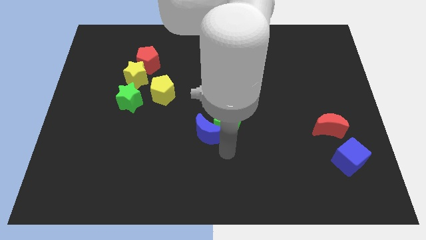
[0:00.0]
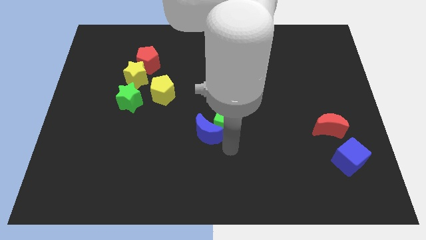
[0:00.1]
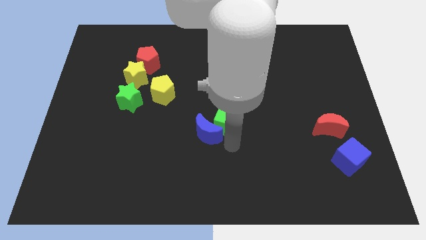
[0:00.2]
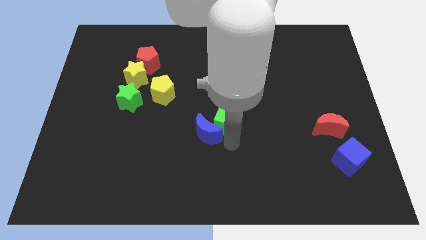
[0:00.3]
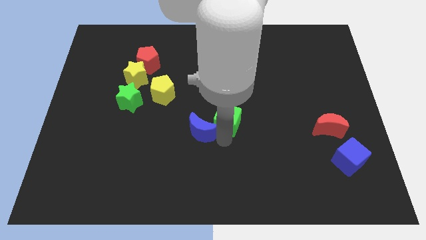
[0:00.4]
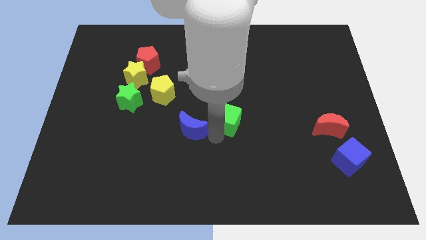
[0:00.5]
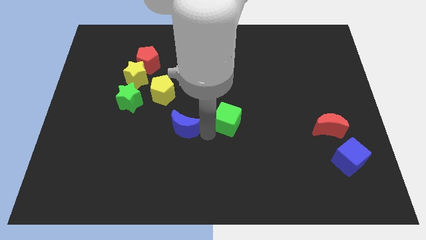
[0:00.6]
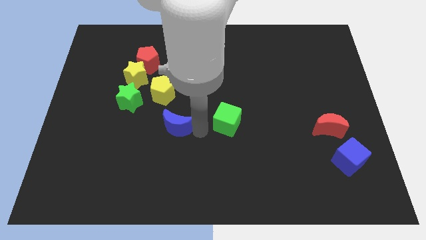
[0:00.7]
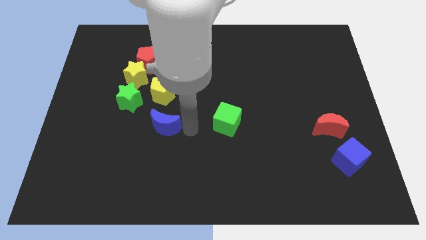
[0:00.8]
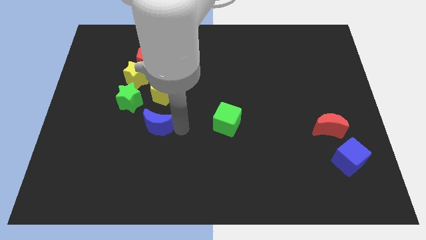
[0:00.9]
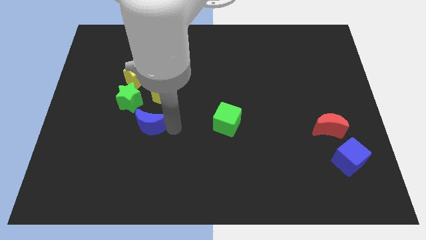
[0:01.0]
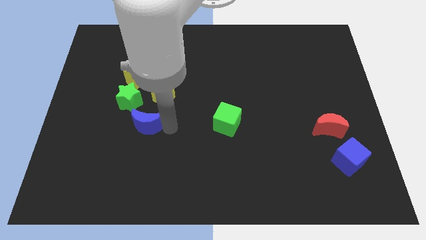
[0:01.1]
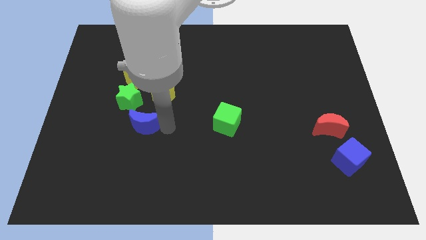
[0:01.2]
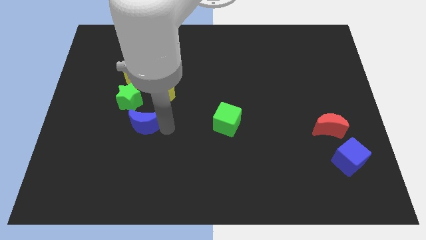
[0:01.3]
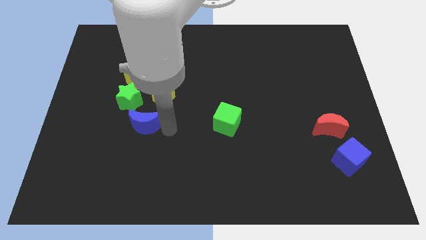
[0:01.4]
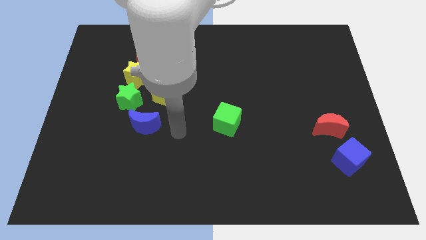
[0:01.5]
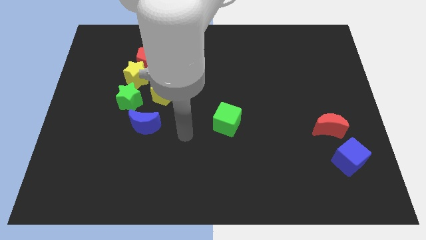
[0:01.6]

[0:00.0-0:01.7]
push the blue moon to the bottom side of the green star and yellow pentagon

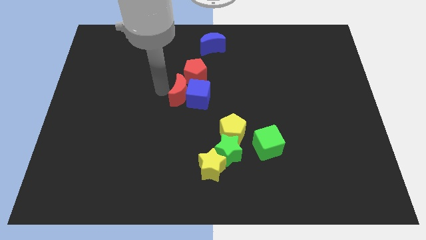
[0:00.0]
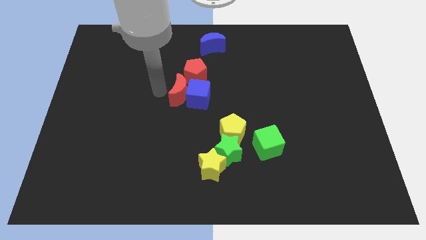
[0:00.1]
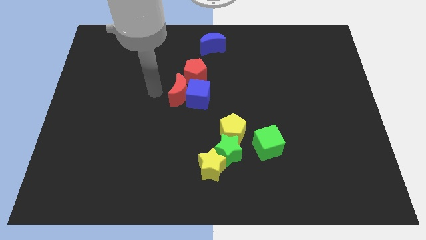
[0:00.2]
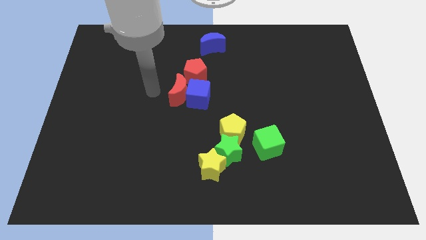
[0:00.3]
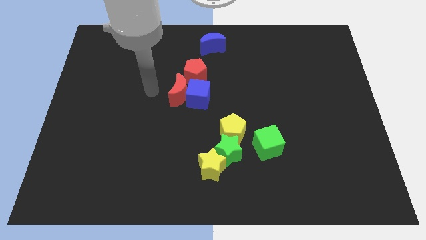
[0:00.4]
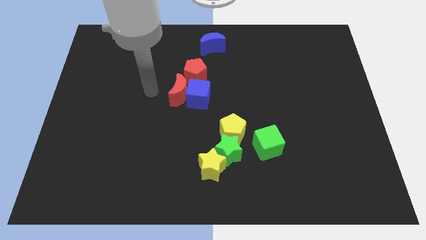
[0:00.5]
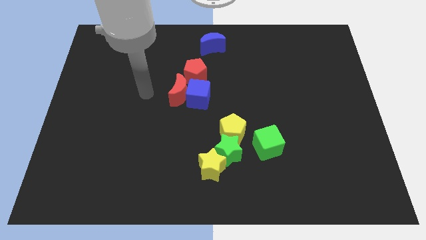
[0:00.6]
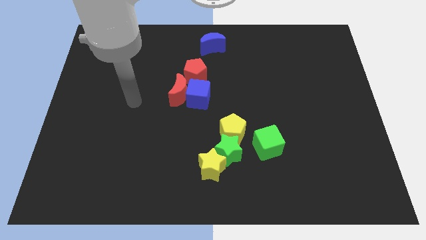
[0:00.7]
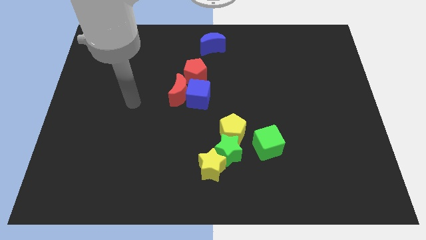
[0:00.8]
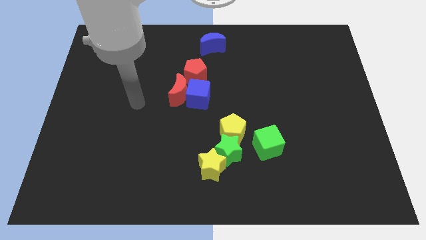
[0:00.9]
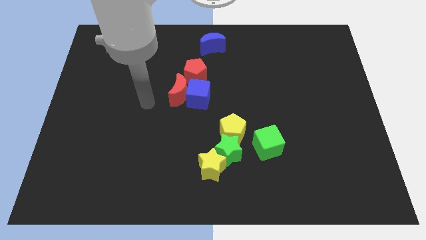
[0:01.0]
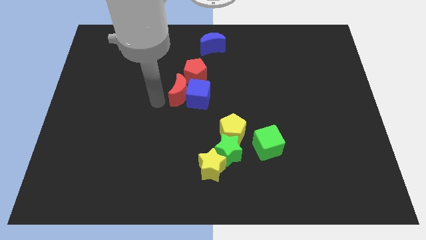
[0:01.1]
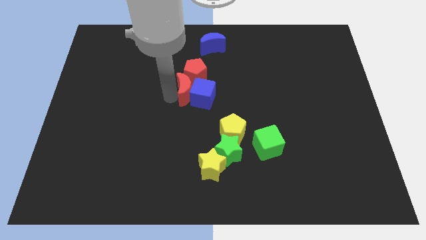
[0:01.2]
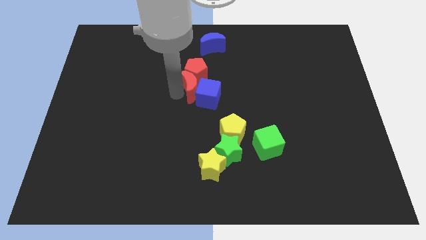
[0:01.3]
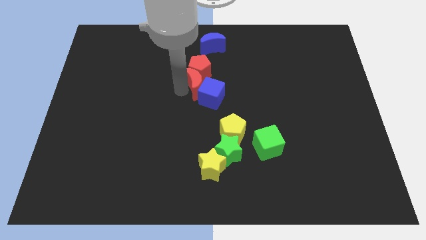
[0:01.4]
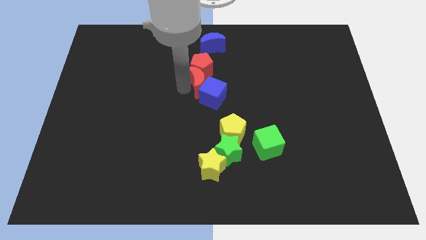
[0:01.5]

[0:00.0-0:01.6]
place red crescent below red pentagon

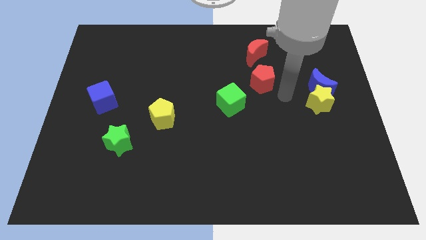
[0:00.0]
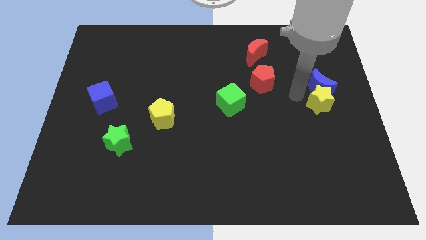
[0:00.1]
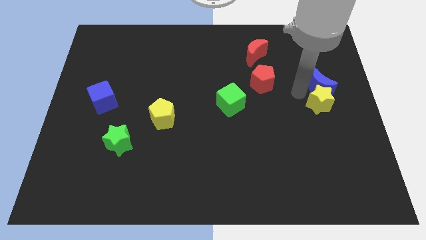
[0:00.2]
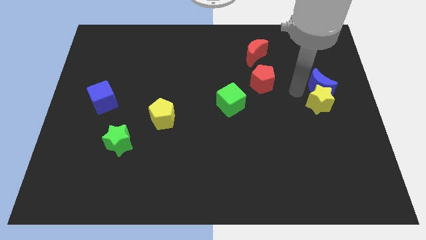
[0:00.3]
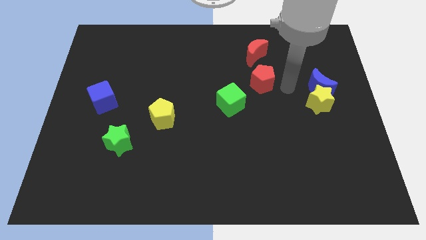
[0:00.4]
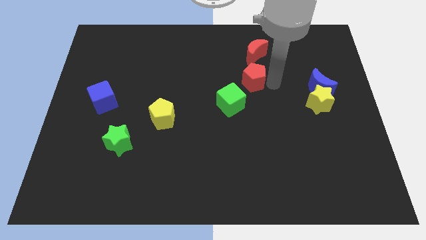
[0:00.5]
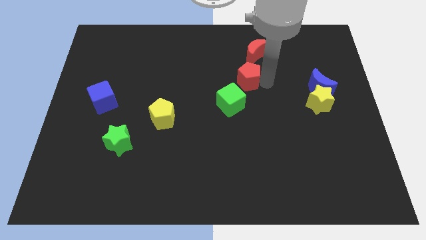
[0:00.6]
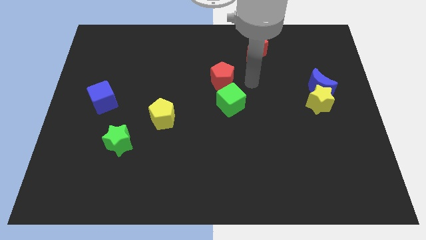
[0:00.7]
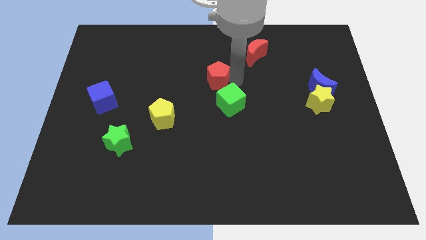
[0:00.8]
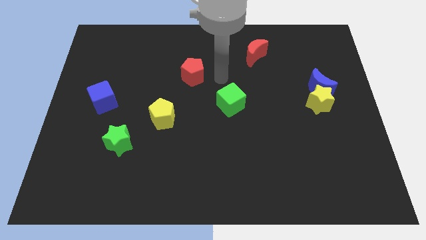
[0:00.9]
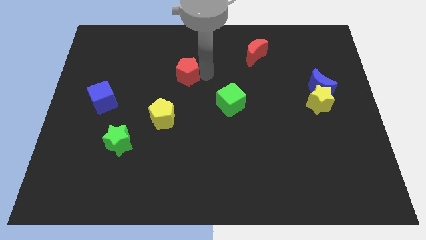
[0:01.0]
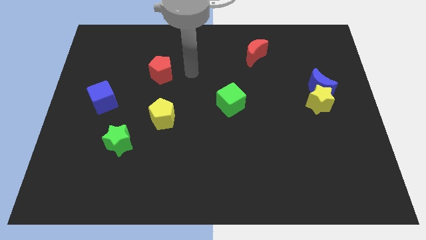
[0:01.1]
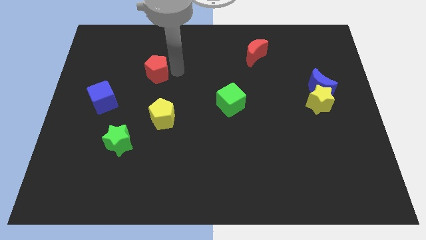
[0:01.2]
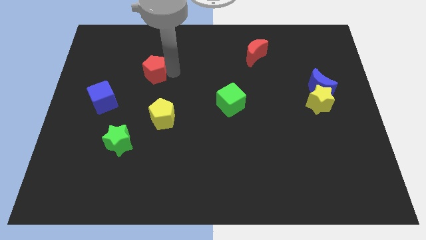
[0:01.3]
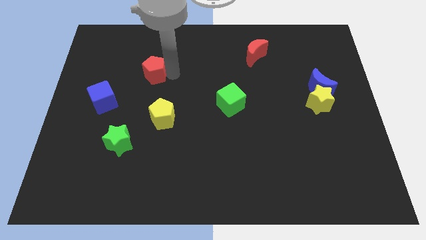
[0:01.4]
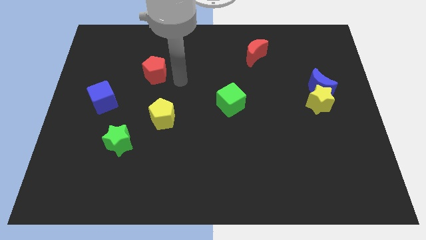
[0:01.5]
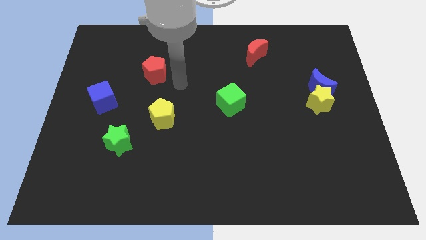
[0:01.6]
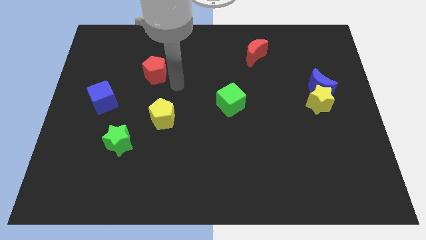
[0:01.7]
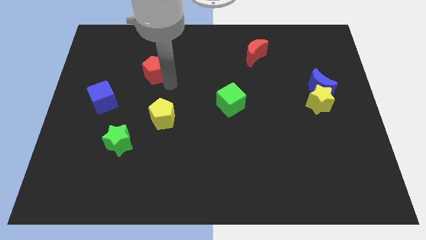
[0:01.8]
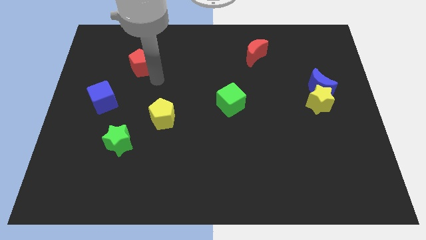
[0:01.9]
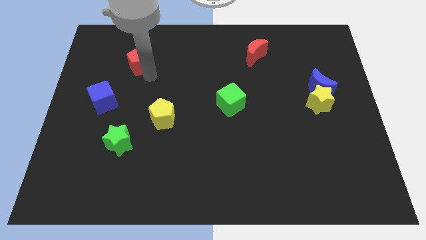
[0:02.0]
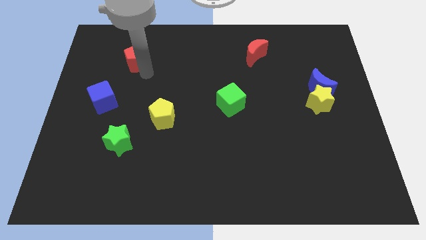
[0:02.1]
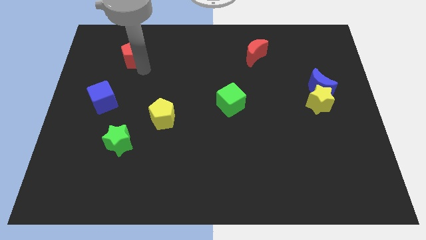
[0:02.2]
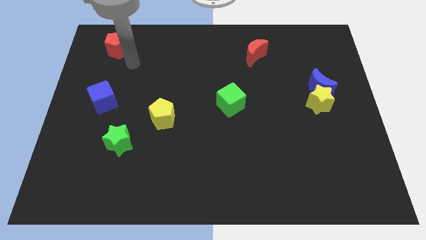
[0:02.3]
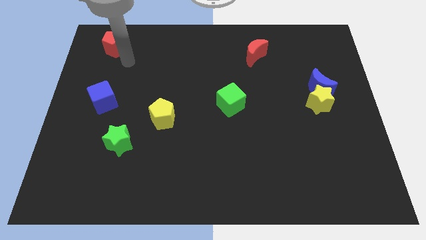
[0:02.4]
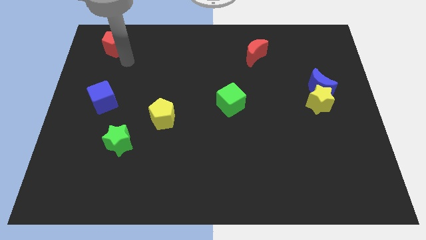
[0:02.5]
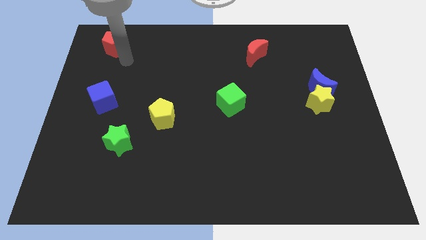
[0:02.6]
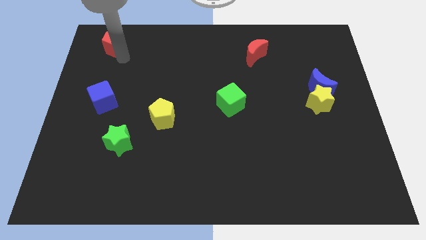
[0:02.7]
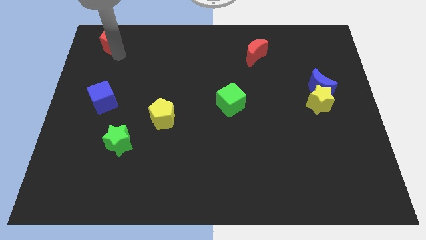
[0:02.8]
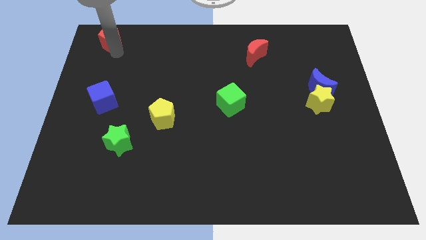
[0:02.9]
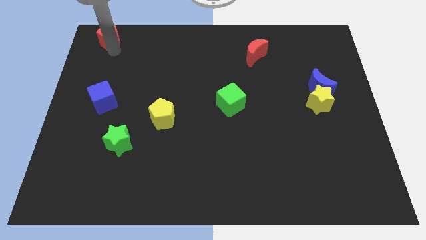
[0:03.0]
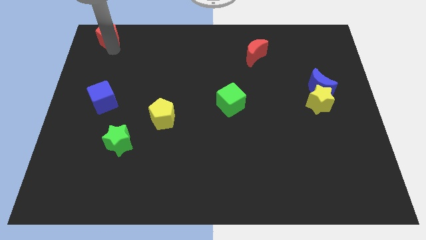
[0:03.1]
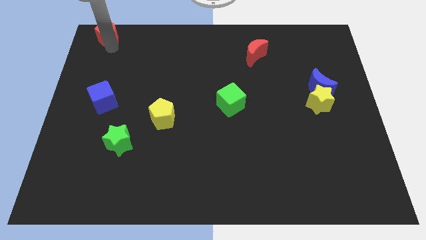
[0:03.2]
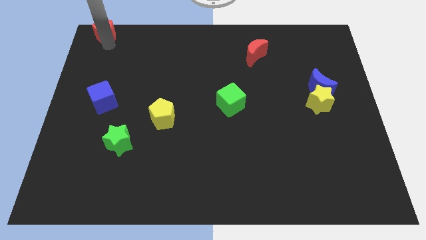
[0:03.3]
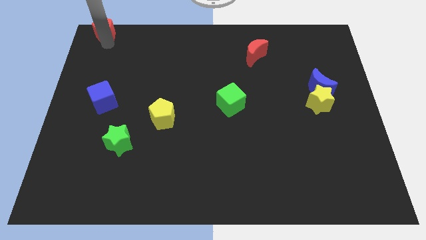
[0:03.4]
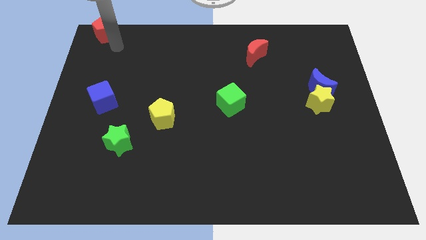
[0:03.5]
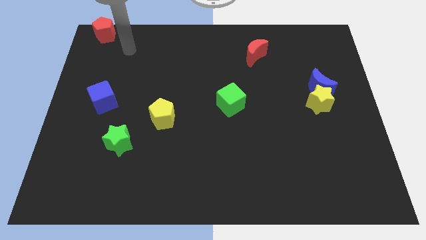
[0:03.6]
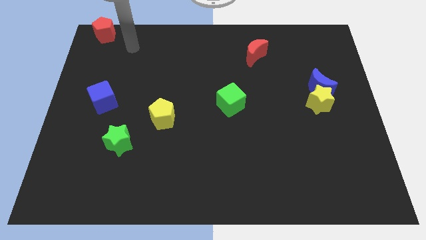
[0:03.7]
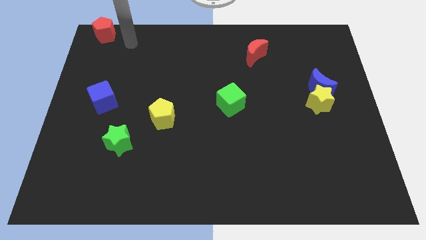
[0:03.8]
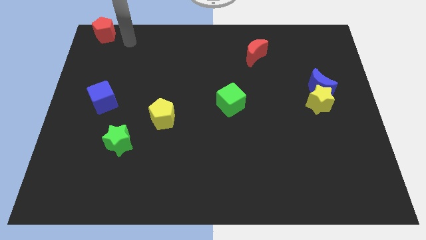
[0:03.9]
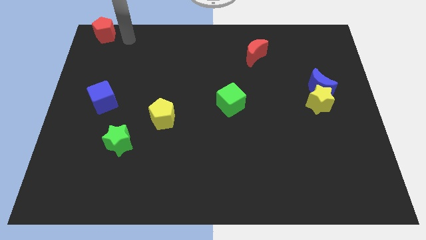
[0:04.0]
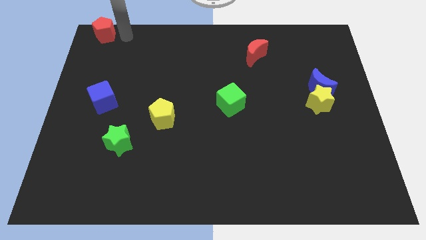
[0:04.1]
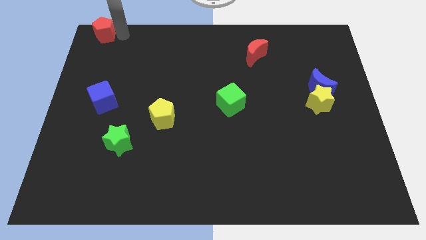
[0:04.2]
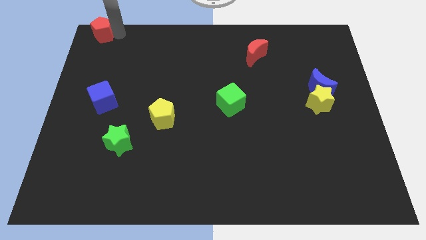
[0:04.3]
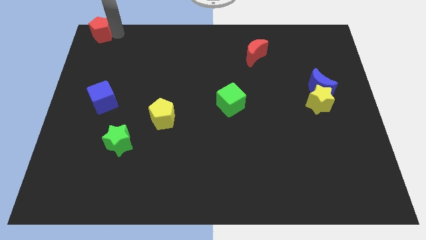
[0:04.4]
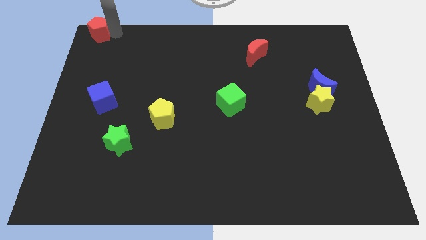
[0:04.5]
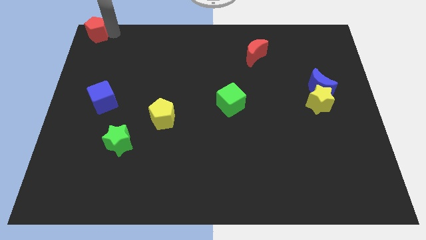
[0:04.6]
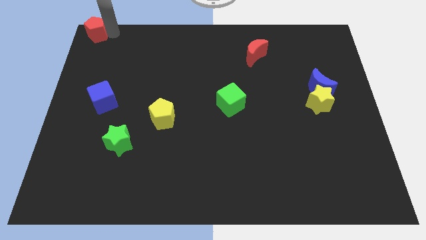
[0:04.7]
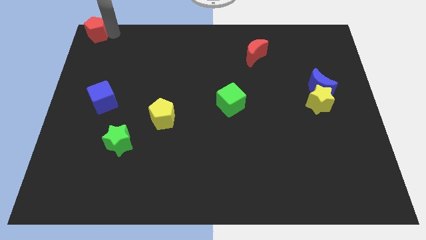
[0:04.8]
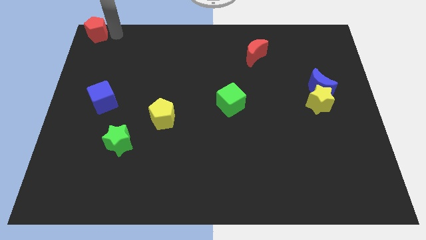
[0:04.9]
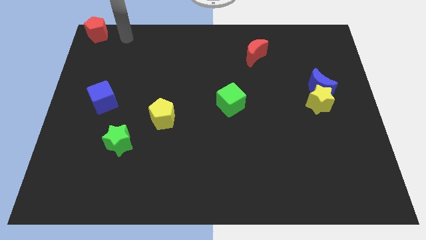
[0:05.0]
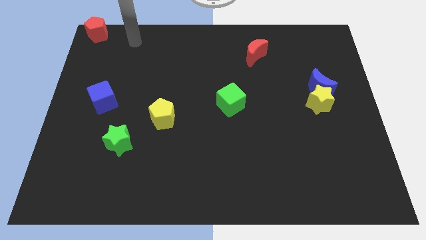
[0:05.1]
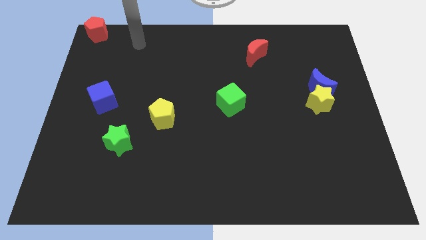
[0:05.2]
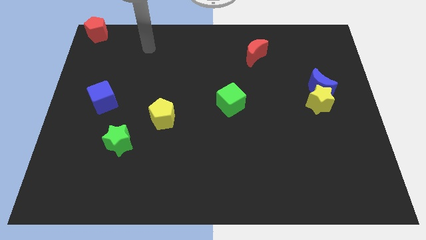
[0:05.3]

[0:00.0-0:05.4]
slide the red pentagon to the top left corner of the board

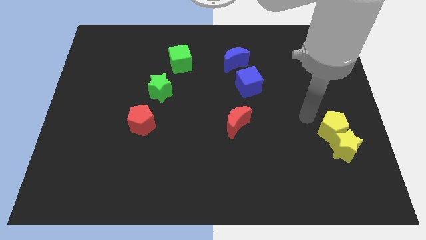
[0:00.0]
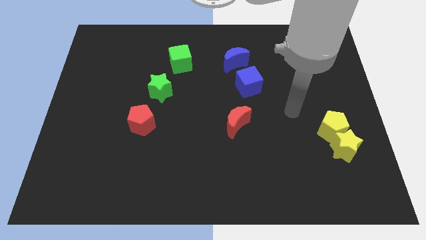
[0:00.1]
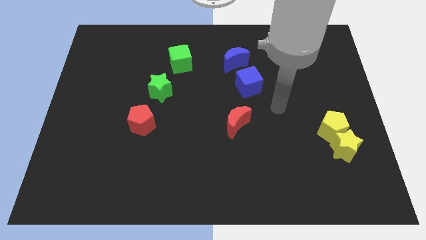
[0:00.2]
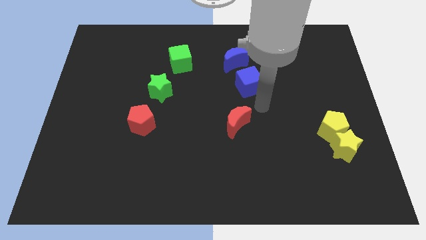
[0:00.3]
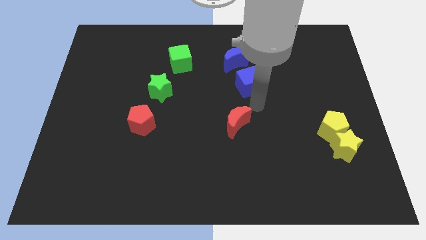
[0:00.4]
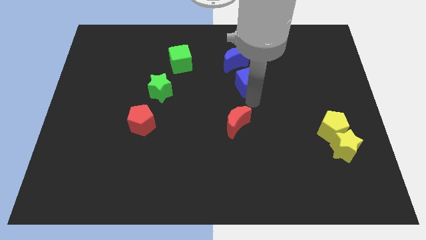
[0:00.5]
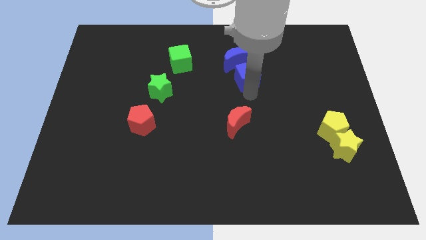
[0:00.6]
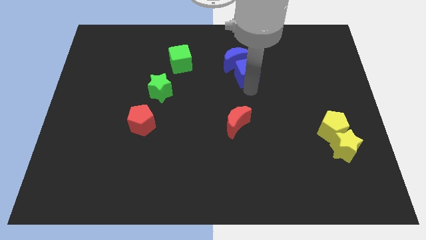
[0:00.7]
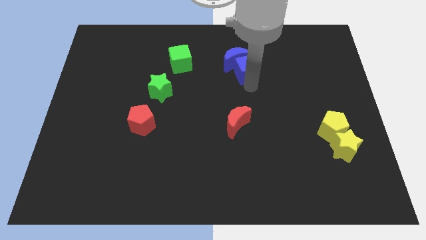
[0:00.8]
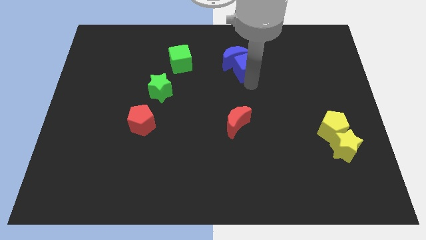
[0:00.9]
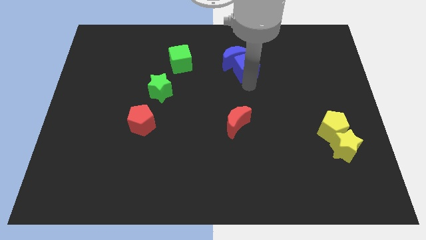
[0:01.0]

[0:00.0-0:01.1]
push the blue cube into the blue moon
